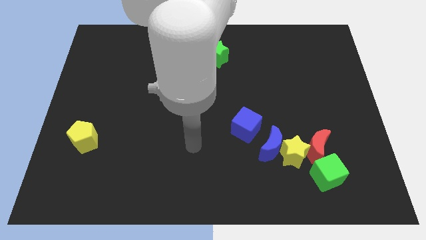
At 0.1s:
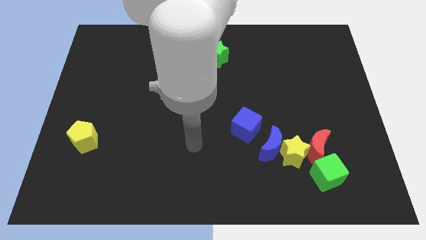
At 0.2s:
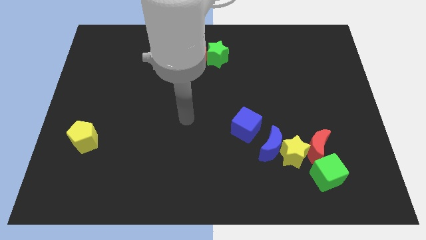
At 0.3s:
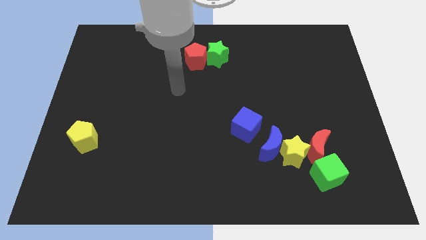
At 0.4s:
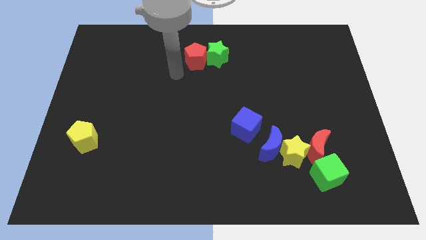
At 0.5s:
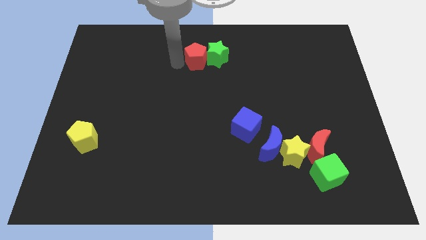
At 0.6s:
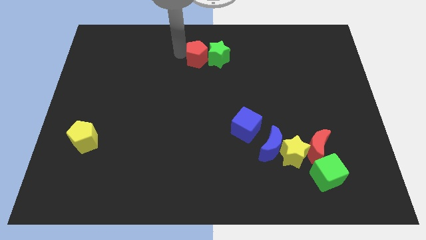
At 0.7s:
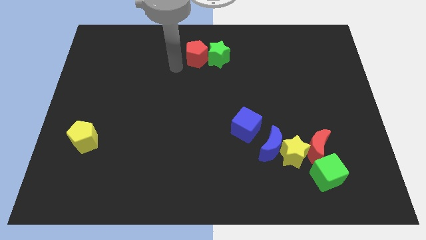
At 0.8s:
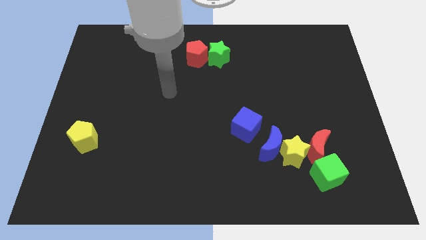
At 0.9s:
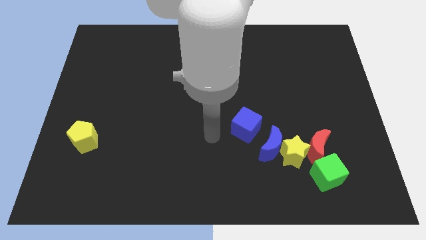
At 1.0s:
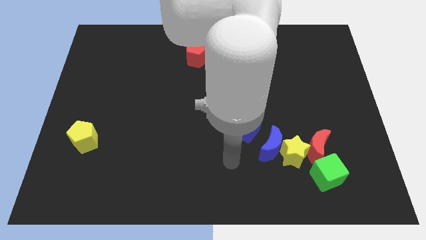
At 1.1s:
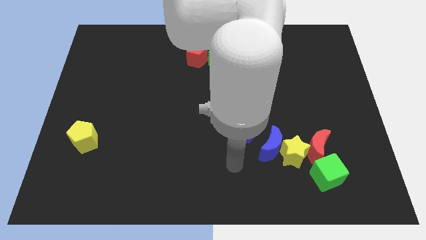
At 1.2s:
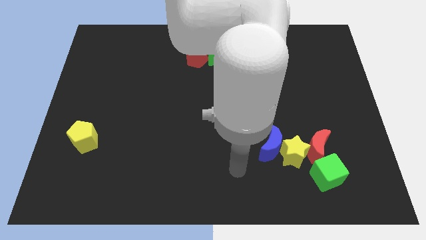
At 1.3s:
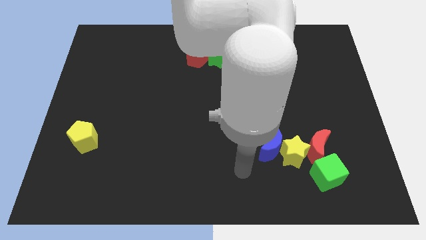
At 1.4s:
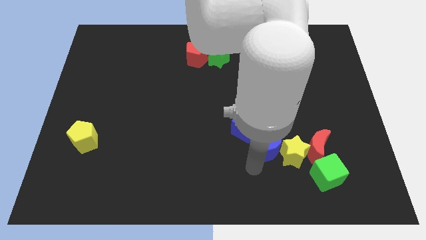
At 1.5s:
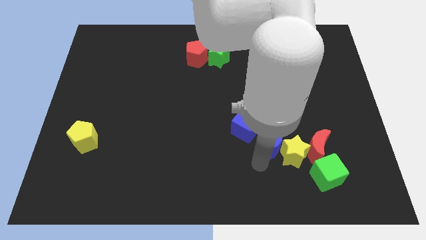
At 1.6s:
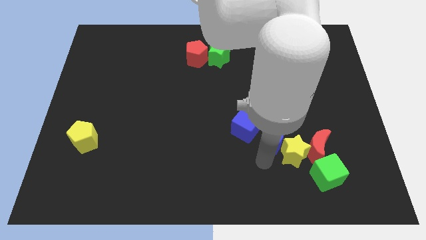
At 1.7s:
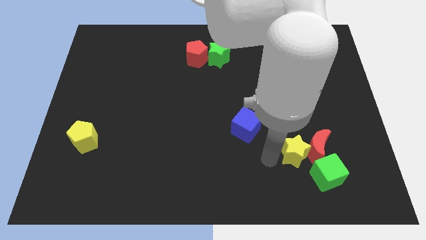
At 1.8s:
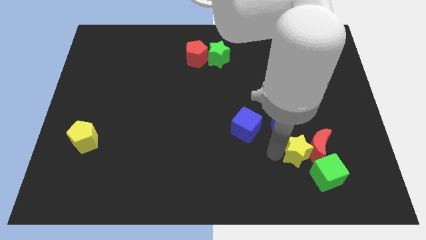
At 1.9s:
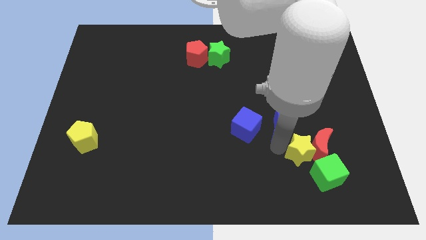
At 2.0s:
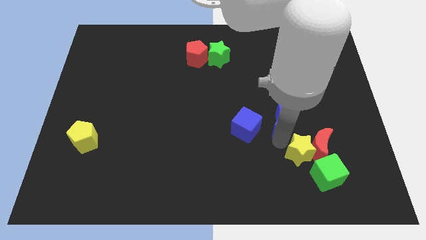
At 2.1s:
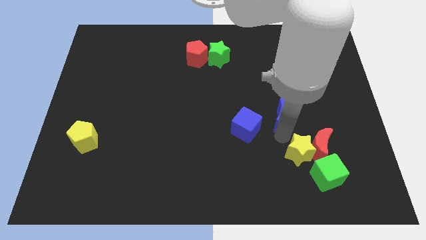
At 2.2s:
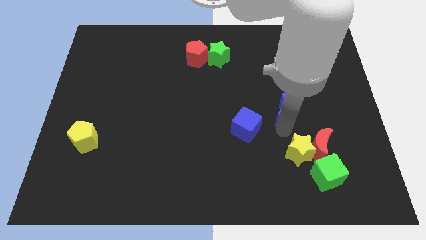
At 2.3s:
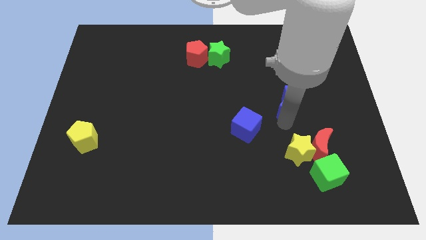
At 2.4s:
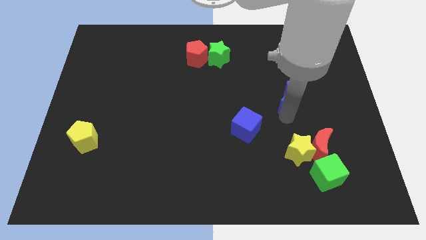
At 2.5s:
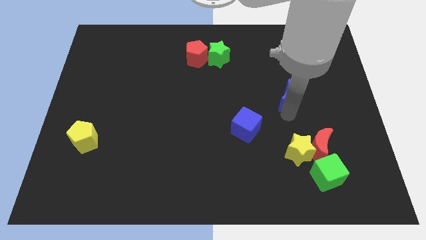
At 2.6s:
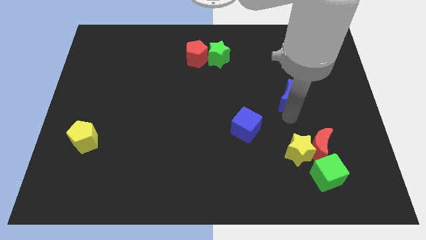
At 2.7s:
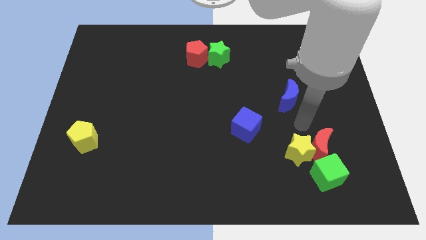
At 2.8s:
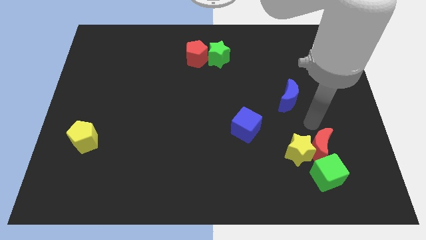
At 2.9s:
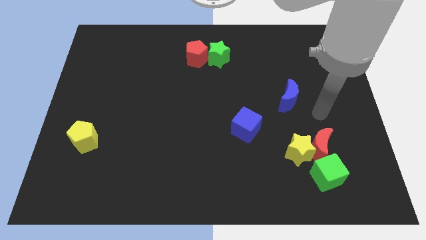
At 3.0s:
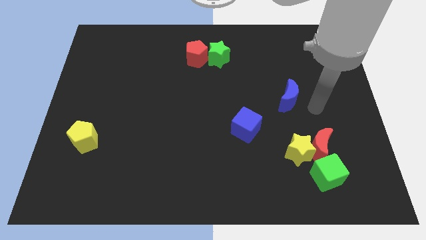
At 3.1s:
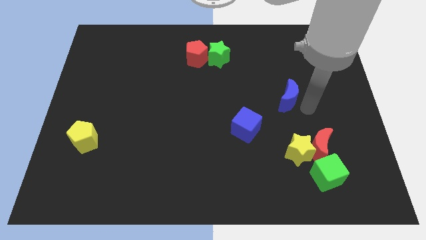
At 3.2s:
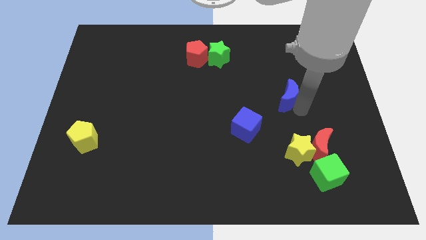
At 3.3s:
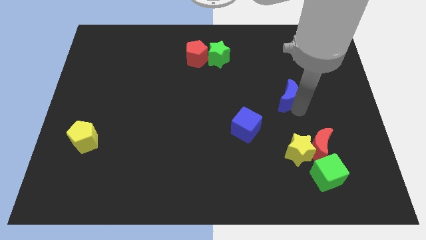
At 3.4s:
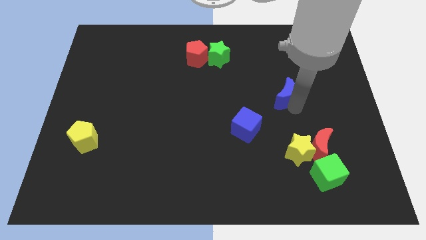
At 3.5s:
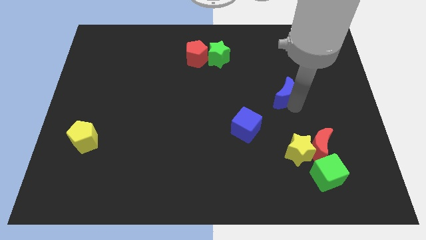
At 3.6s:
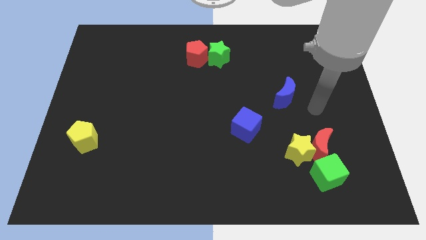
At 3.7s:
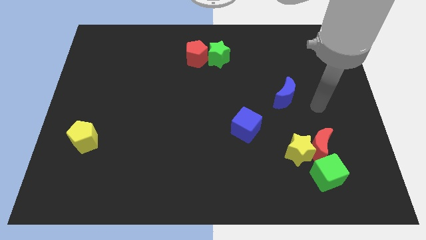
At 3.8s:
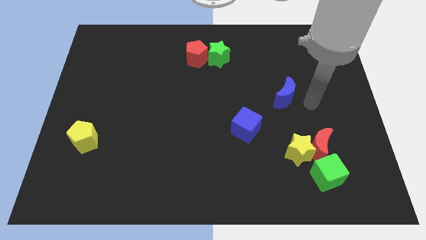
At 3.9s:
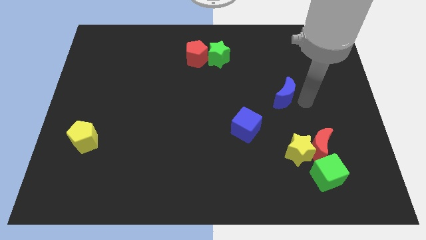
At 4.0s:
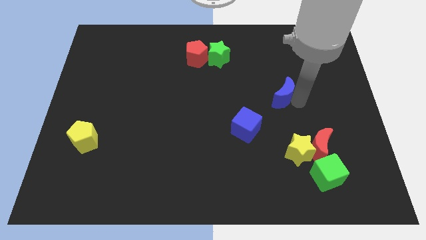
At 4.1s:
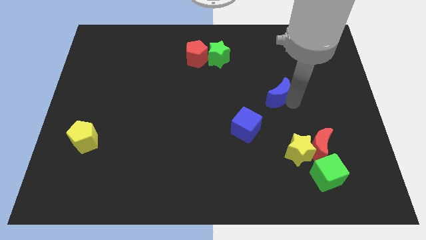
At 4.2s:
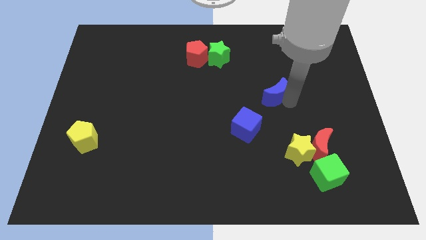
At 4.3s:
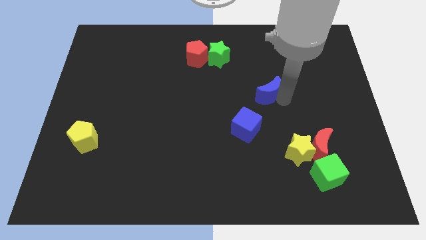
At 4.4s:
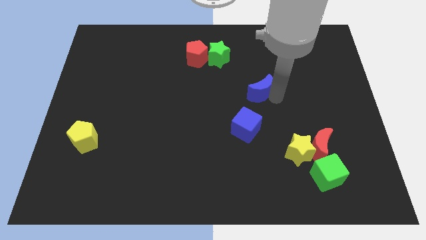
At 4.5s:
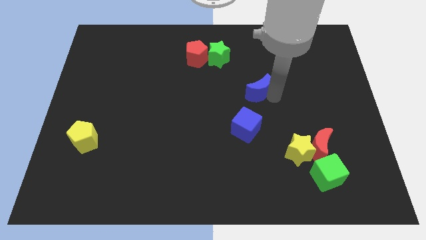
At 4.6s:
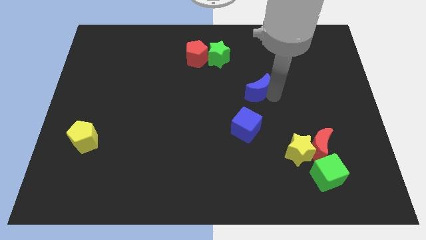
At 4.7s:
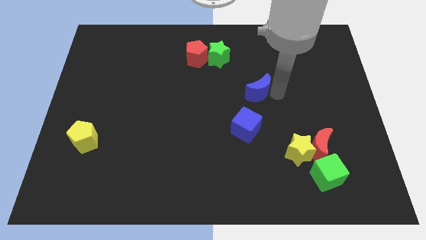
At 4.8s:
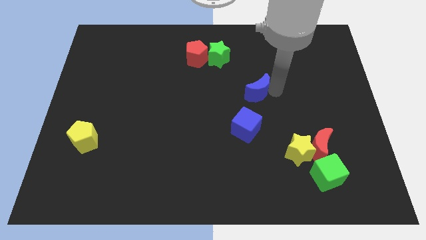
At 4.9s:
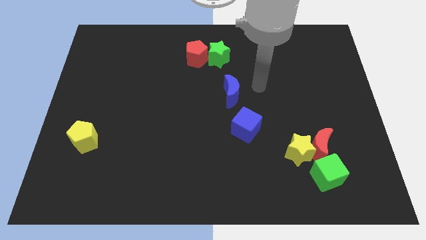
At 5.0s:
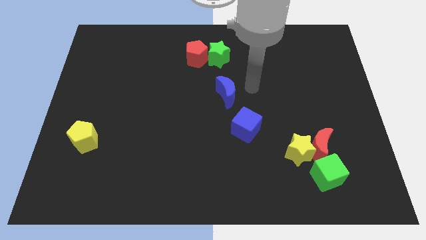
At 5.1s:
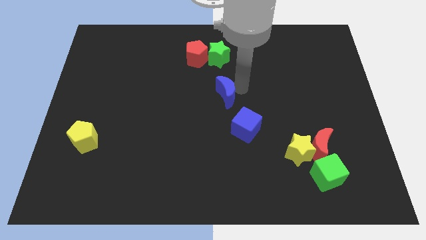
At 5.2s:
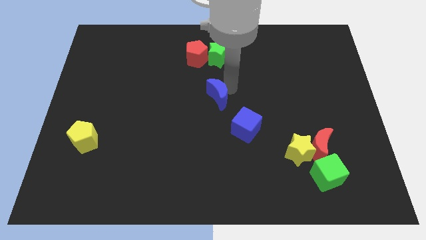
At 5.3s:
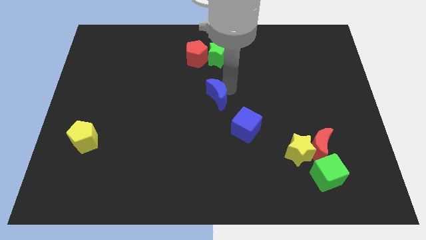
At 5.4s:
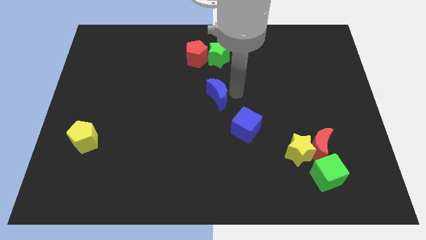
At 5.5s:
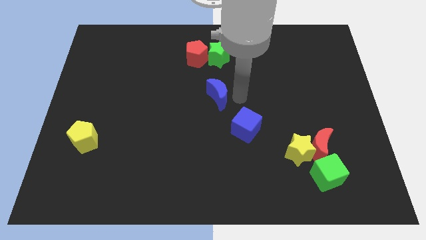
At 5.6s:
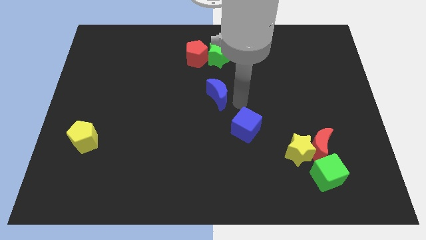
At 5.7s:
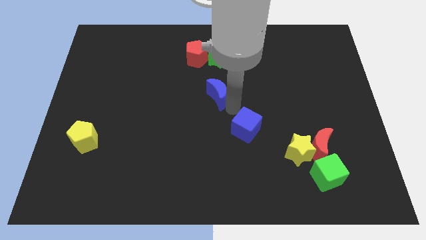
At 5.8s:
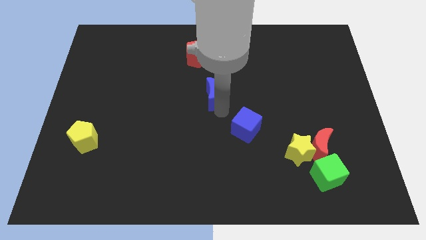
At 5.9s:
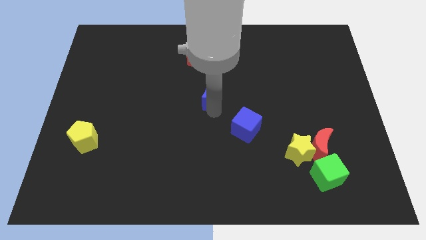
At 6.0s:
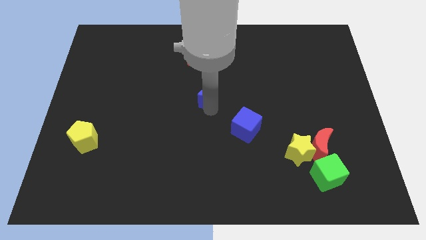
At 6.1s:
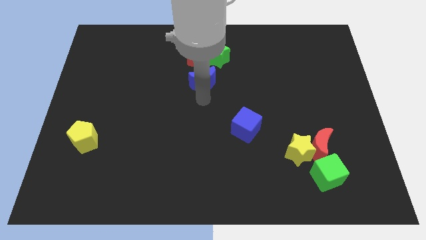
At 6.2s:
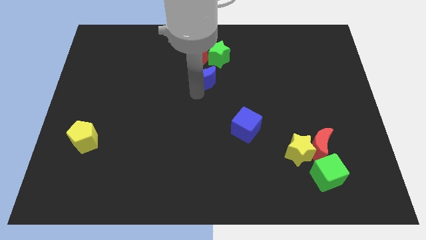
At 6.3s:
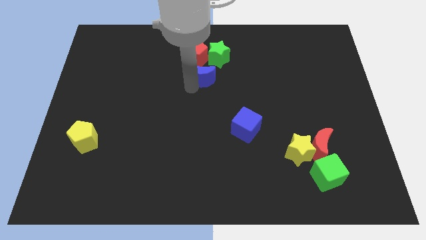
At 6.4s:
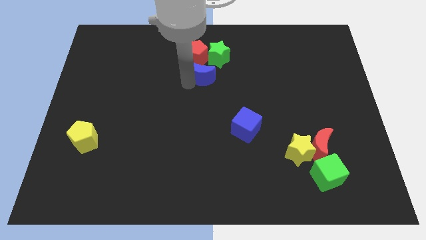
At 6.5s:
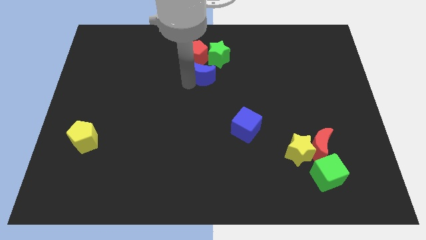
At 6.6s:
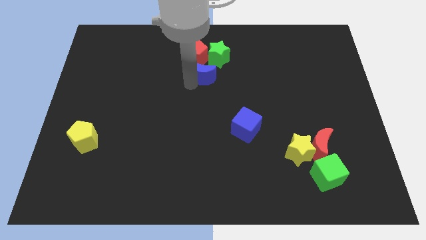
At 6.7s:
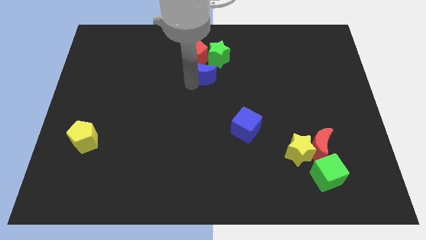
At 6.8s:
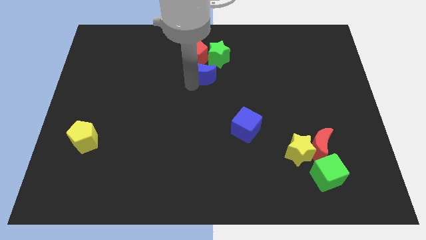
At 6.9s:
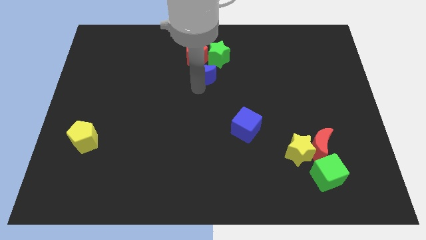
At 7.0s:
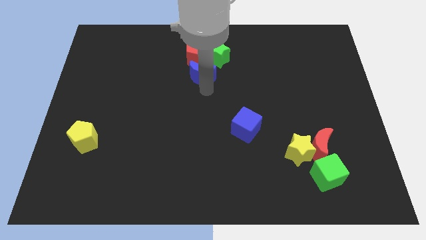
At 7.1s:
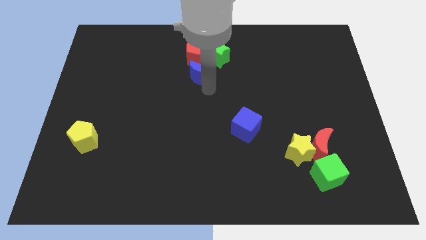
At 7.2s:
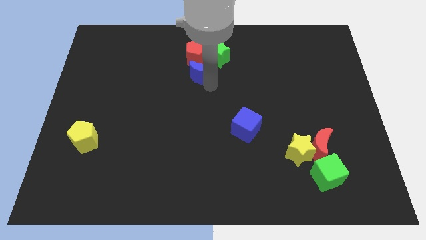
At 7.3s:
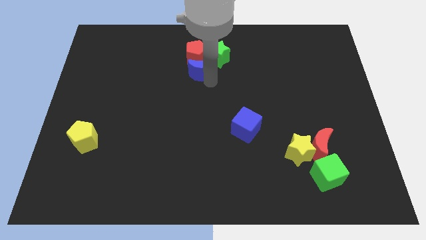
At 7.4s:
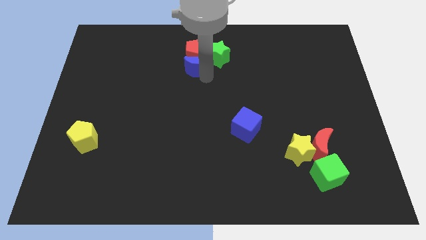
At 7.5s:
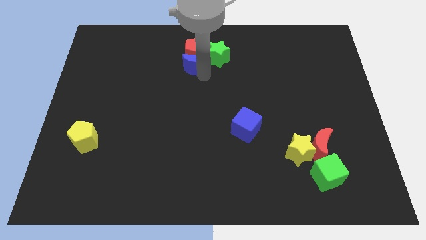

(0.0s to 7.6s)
move the blue moon to the red pentagon

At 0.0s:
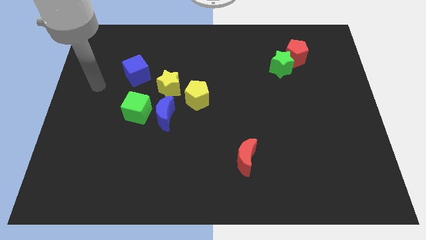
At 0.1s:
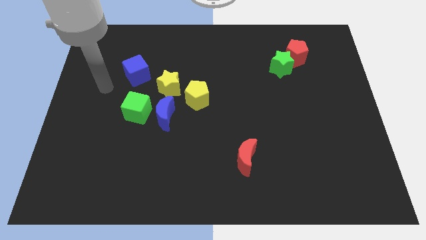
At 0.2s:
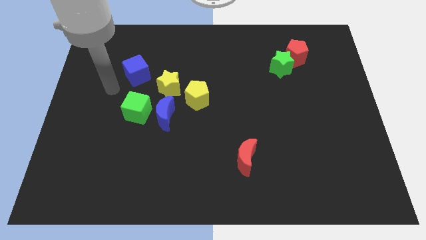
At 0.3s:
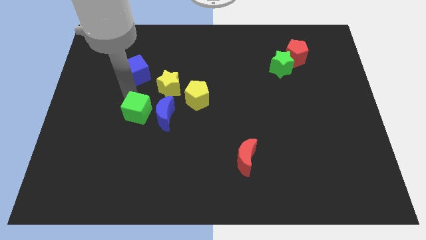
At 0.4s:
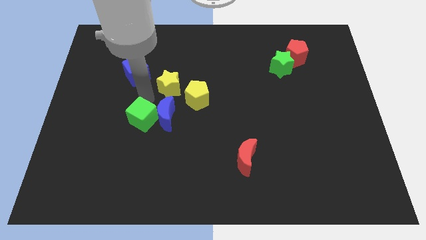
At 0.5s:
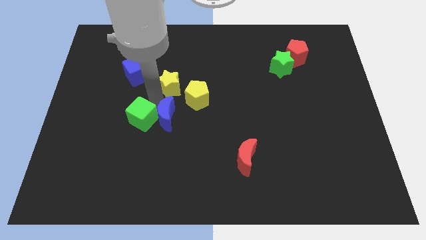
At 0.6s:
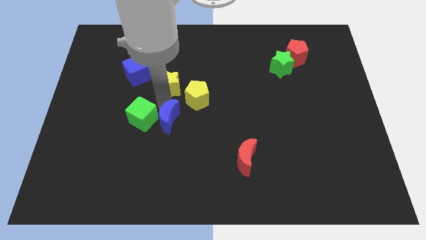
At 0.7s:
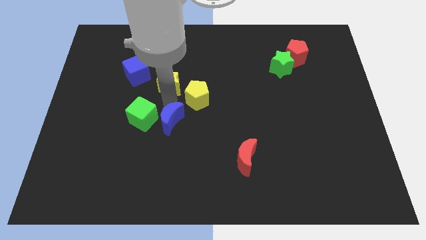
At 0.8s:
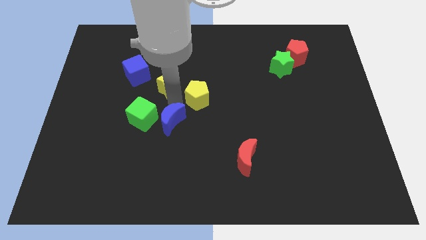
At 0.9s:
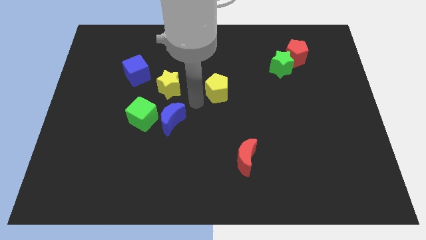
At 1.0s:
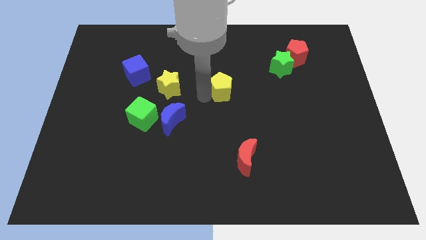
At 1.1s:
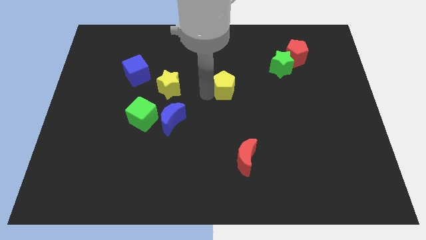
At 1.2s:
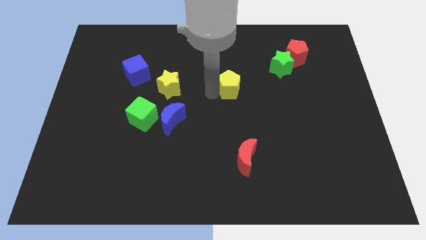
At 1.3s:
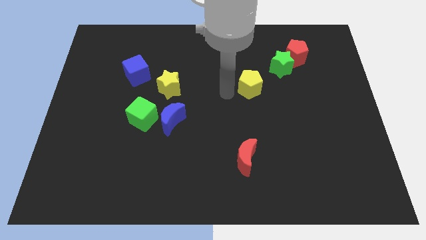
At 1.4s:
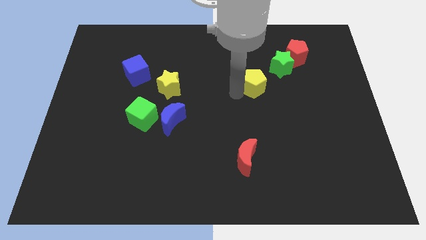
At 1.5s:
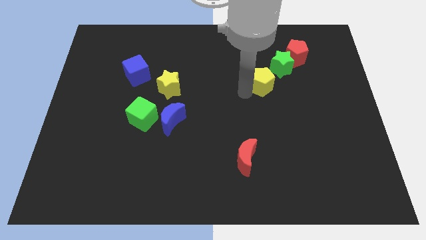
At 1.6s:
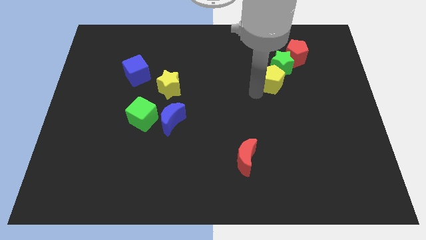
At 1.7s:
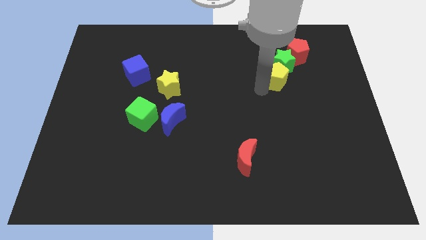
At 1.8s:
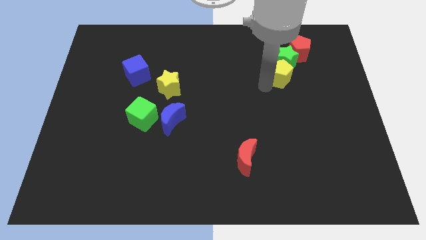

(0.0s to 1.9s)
slide the yellow pentagon close to the green star
